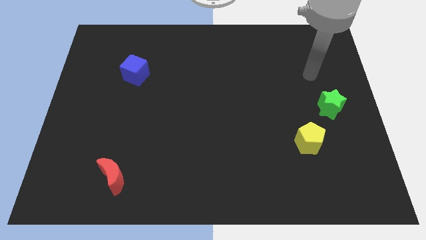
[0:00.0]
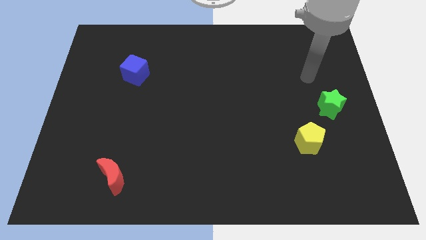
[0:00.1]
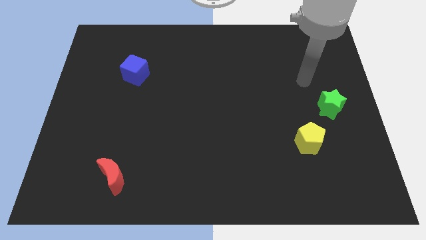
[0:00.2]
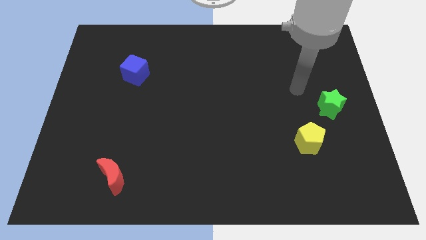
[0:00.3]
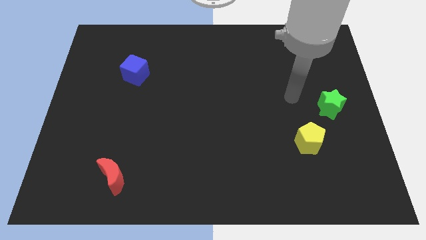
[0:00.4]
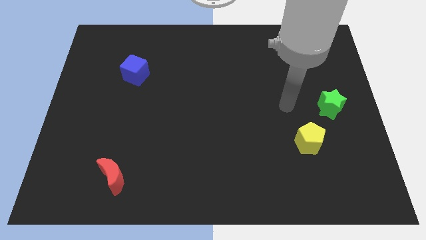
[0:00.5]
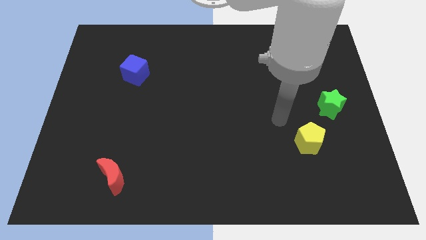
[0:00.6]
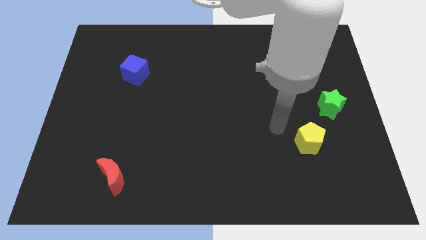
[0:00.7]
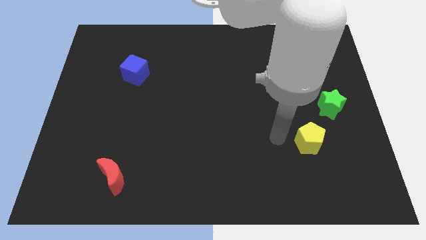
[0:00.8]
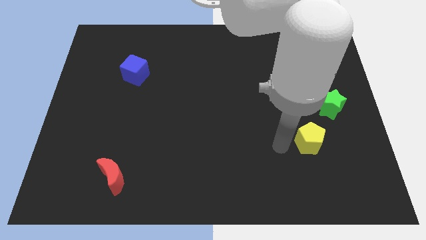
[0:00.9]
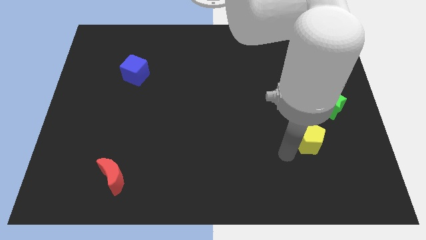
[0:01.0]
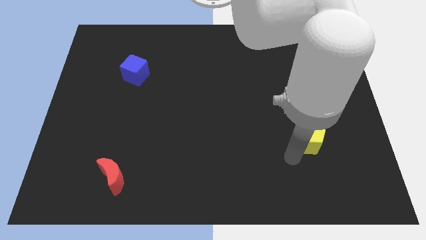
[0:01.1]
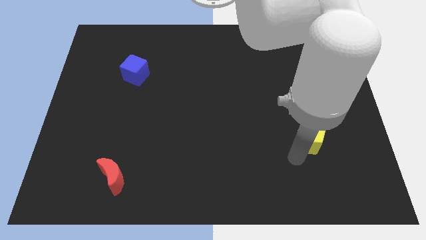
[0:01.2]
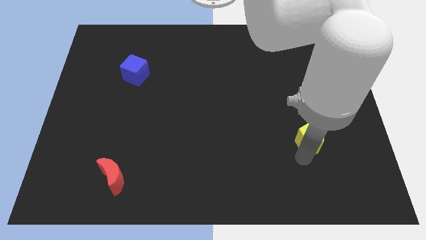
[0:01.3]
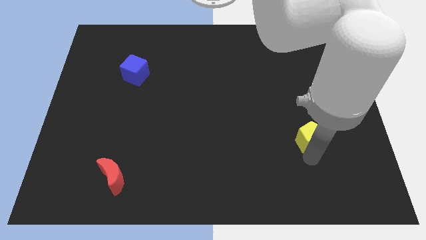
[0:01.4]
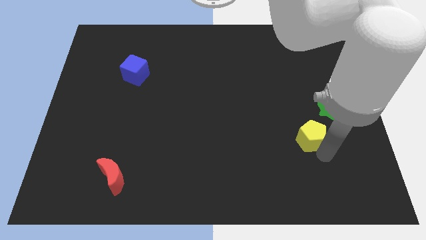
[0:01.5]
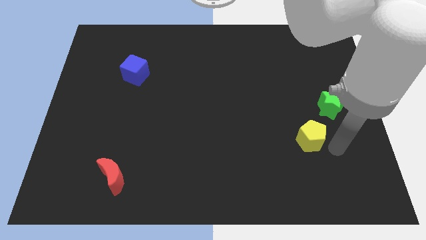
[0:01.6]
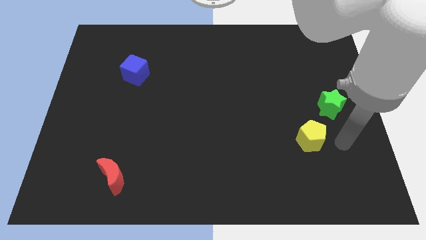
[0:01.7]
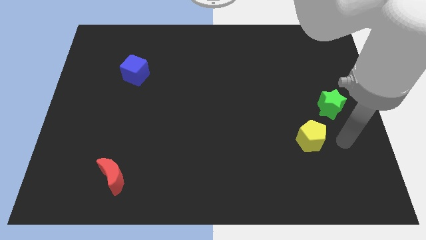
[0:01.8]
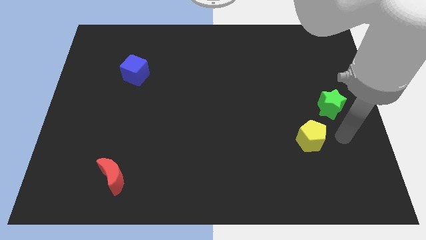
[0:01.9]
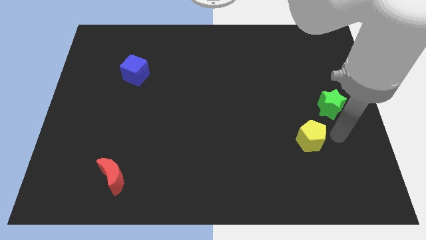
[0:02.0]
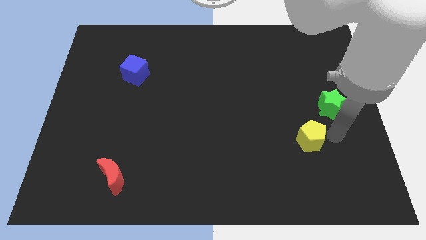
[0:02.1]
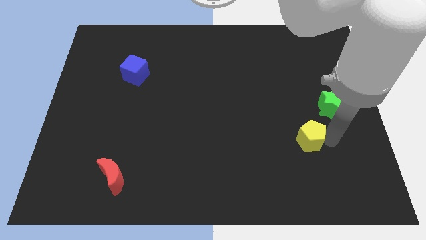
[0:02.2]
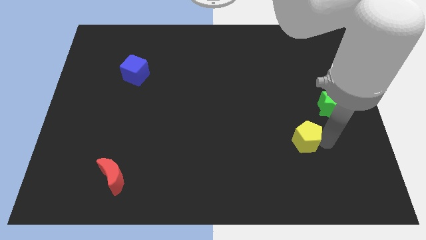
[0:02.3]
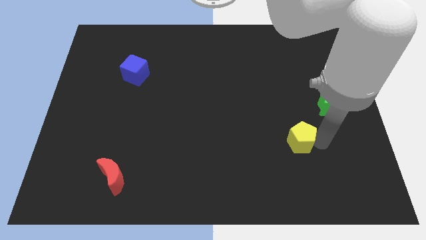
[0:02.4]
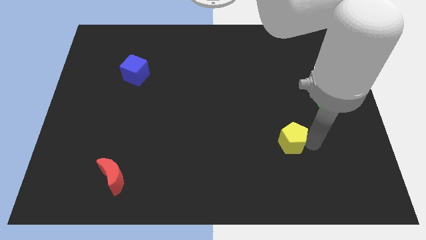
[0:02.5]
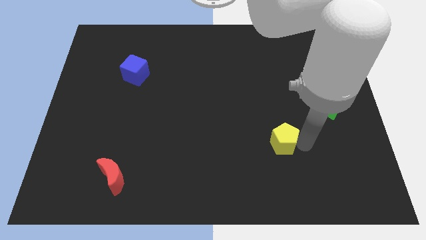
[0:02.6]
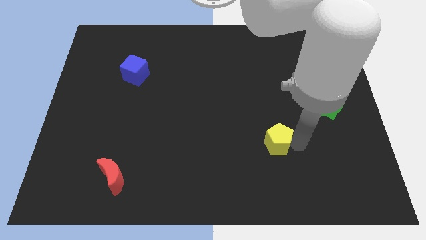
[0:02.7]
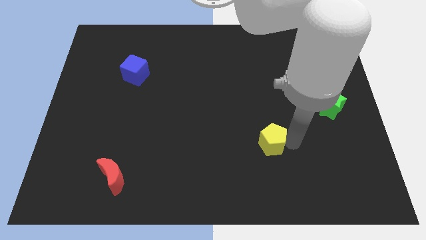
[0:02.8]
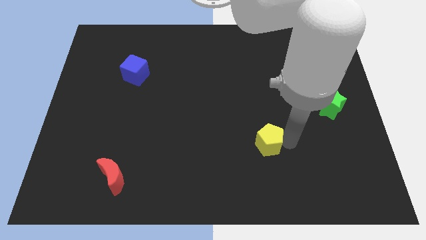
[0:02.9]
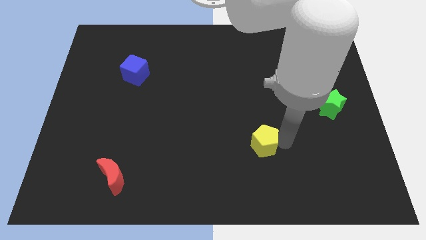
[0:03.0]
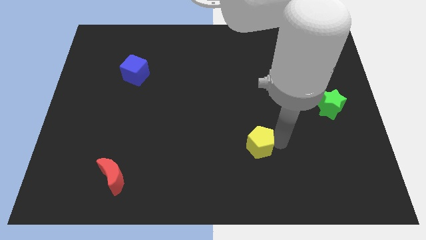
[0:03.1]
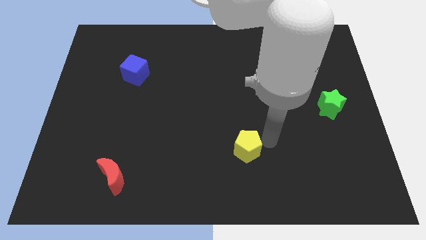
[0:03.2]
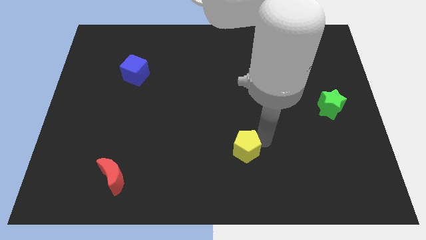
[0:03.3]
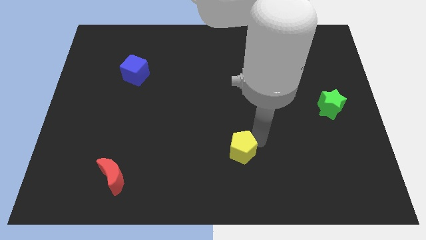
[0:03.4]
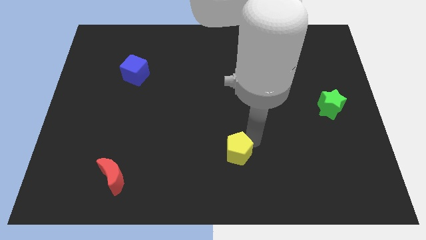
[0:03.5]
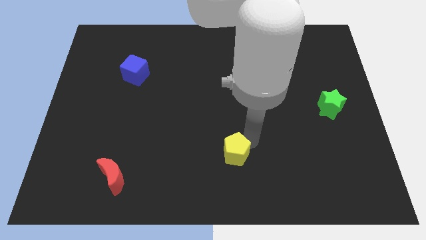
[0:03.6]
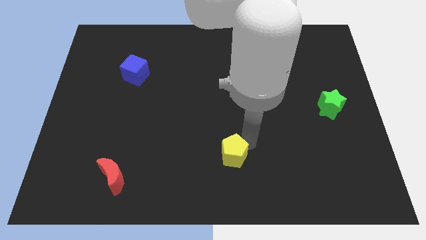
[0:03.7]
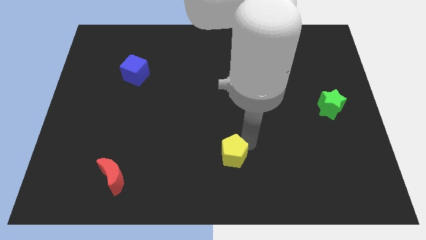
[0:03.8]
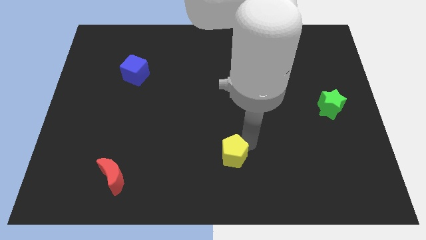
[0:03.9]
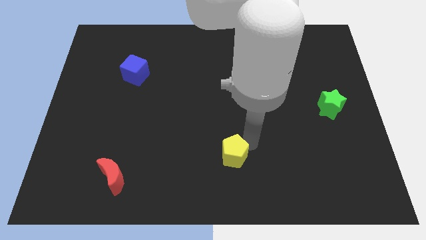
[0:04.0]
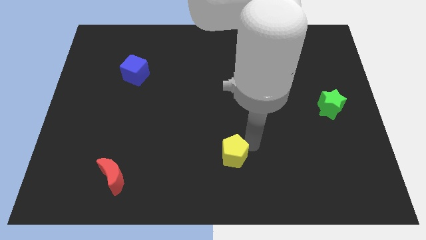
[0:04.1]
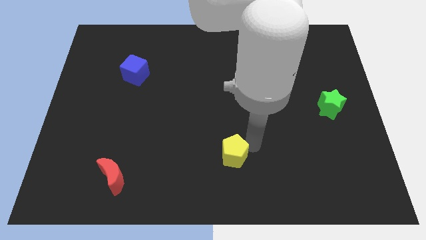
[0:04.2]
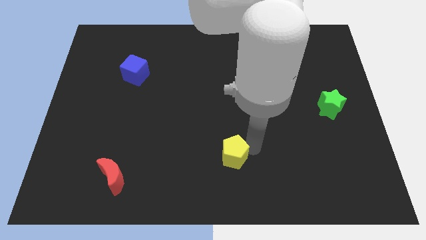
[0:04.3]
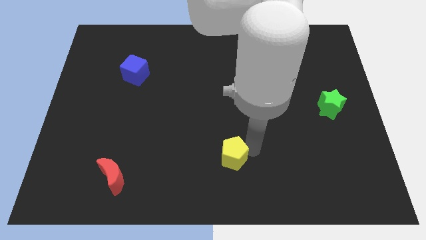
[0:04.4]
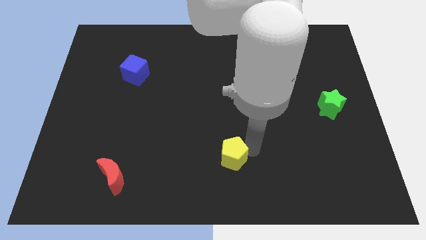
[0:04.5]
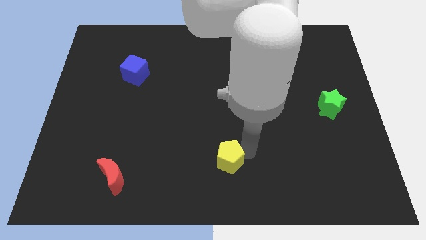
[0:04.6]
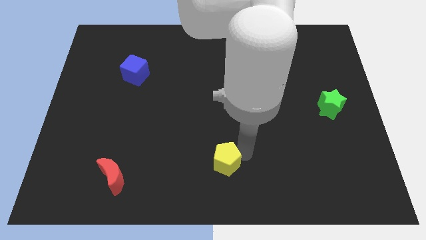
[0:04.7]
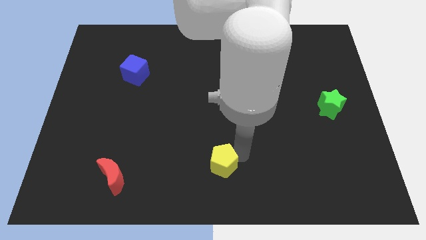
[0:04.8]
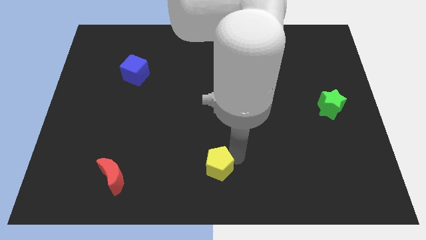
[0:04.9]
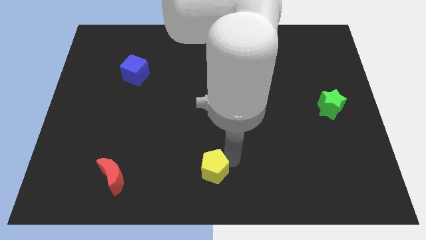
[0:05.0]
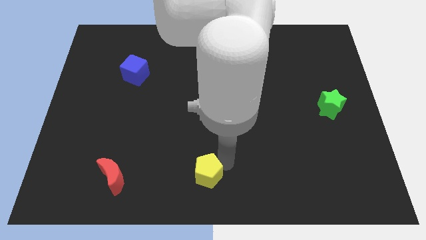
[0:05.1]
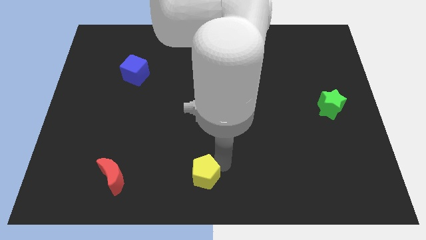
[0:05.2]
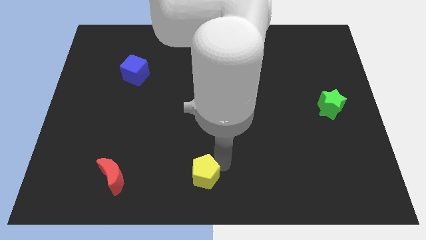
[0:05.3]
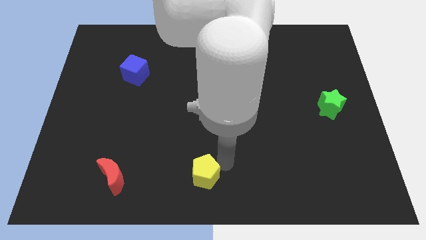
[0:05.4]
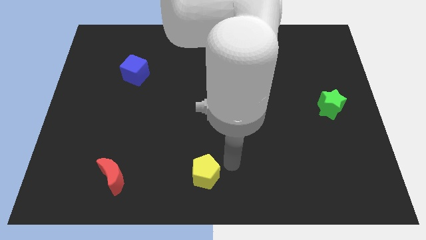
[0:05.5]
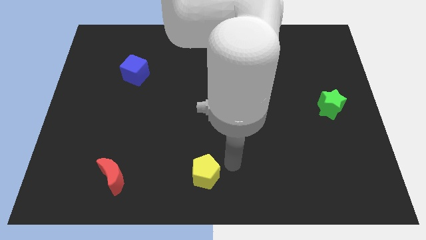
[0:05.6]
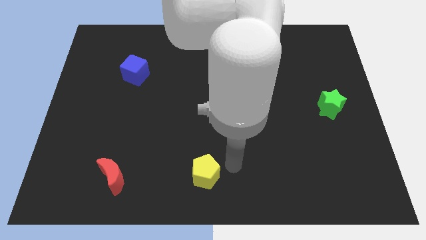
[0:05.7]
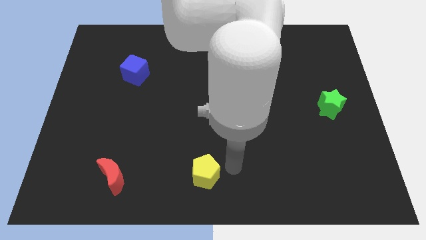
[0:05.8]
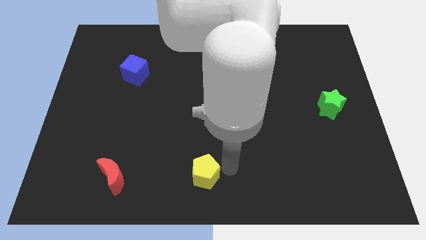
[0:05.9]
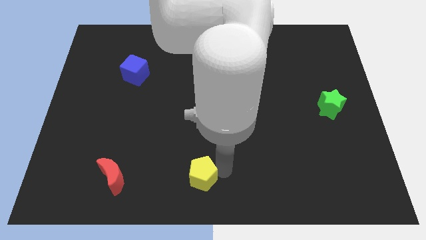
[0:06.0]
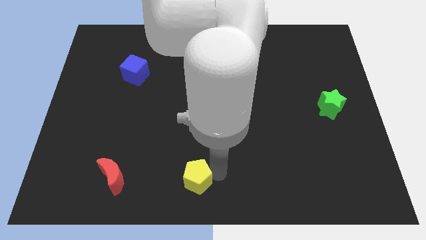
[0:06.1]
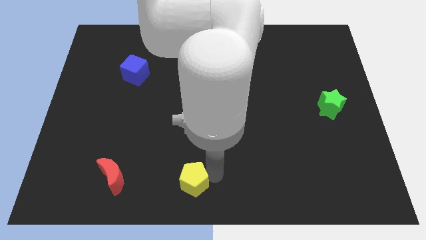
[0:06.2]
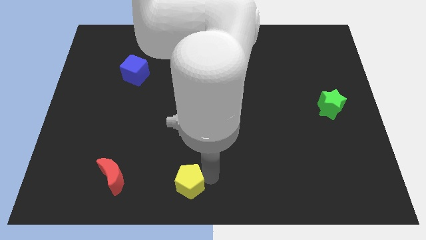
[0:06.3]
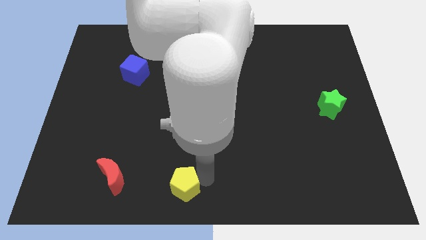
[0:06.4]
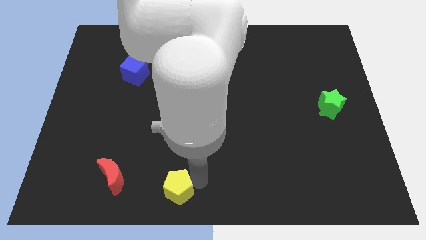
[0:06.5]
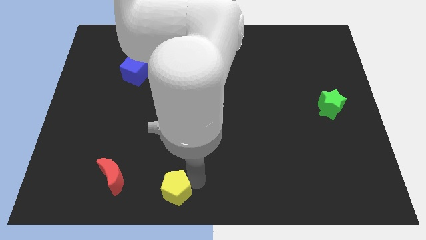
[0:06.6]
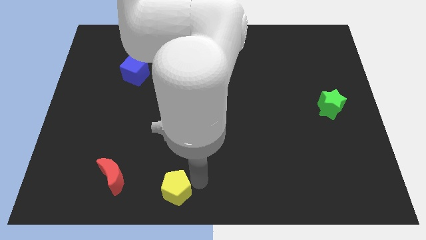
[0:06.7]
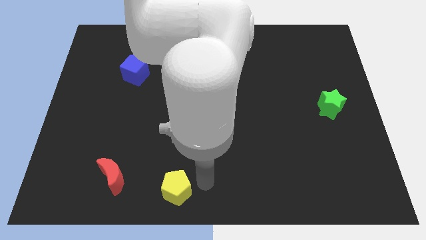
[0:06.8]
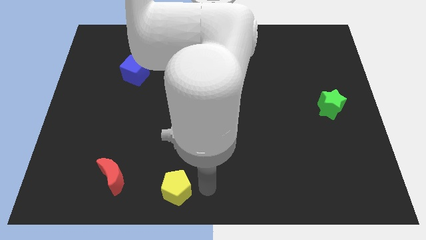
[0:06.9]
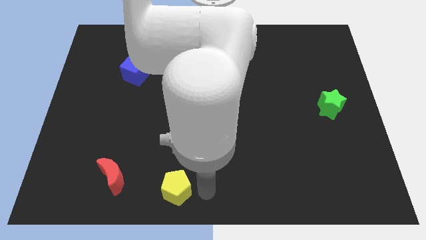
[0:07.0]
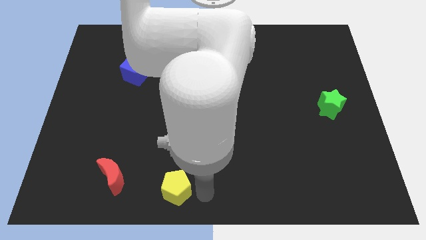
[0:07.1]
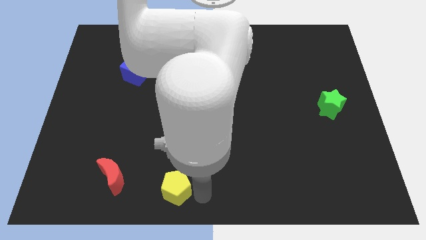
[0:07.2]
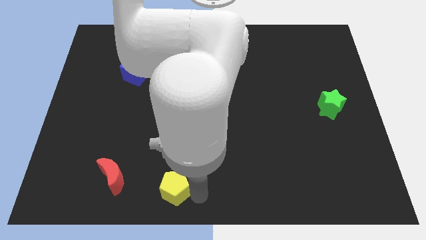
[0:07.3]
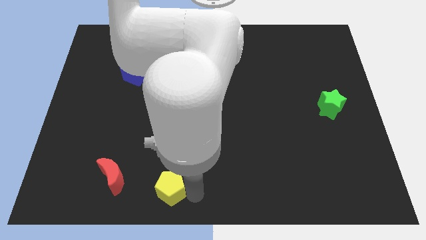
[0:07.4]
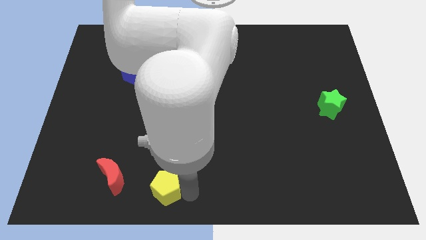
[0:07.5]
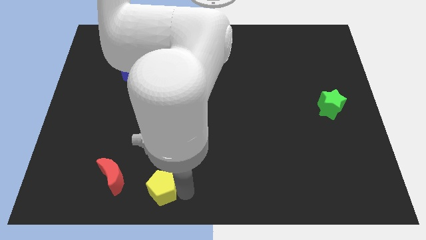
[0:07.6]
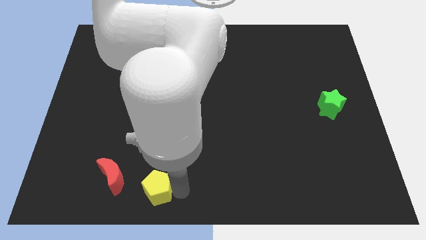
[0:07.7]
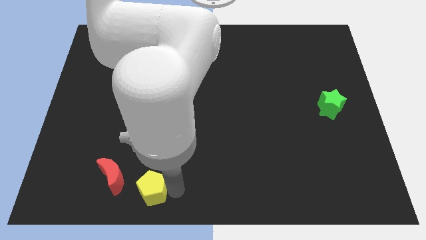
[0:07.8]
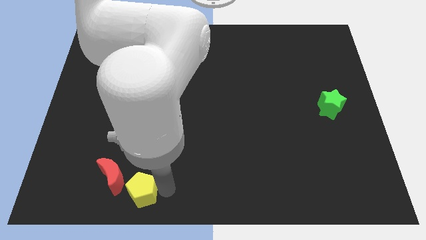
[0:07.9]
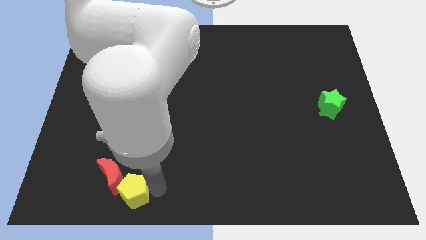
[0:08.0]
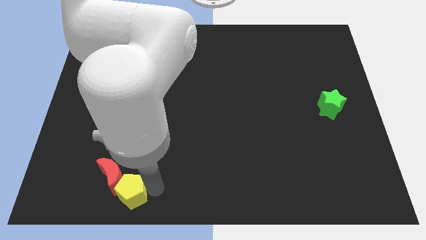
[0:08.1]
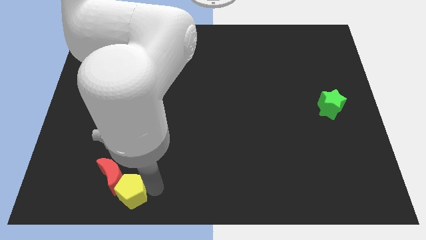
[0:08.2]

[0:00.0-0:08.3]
move the yellow pentagon to the moon
